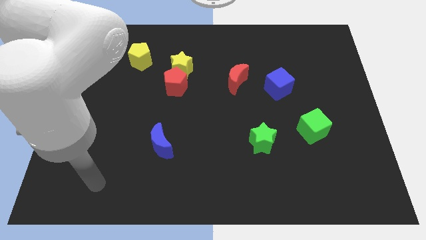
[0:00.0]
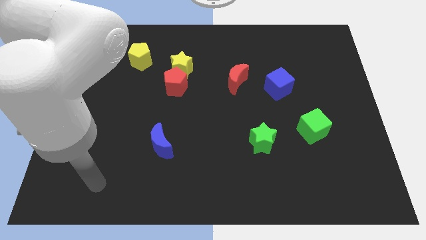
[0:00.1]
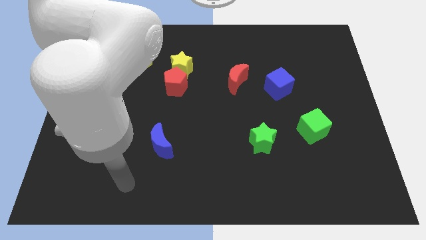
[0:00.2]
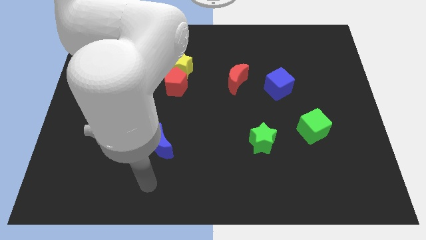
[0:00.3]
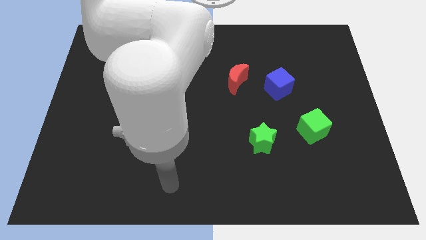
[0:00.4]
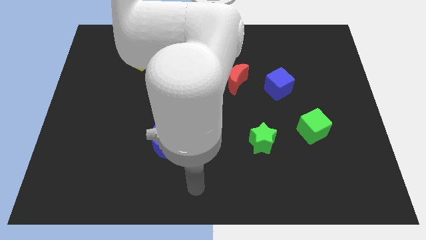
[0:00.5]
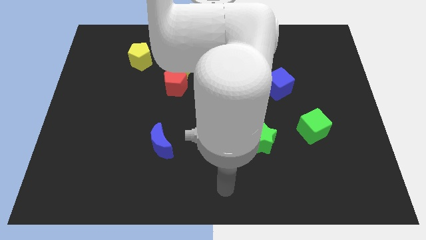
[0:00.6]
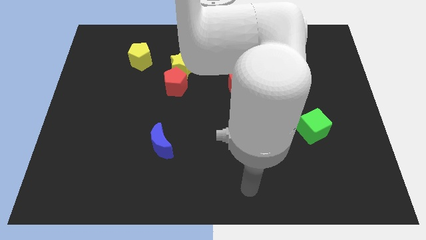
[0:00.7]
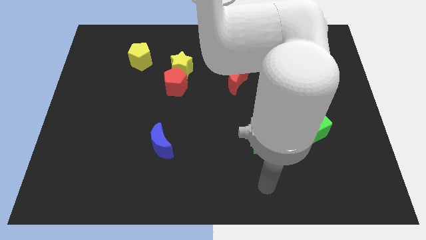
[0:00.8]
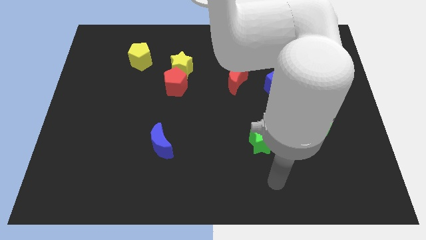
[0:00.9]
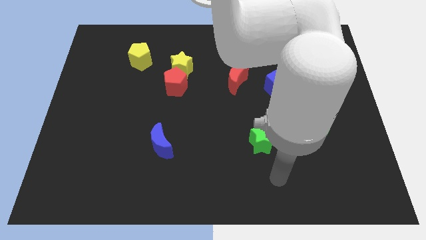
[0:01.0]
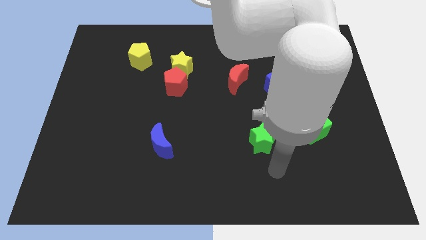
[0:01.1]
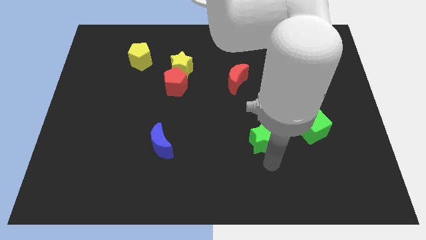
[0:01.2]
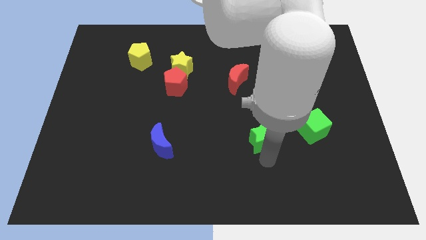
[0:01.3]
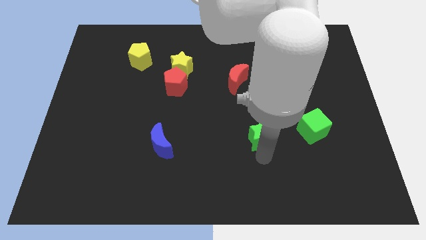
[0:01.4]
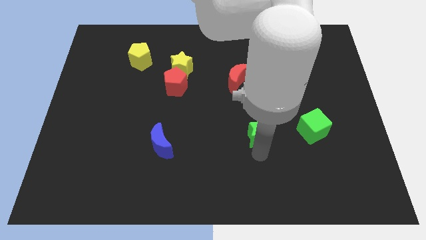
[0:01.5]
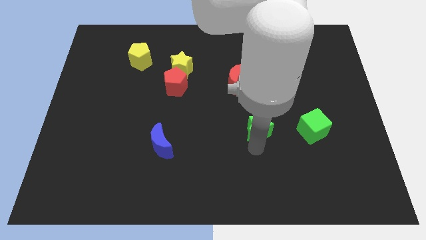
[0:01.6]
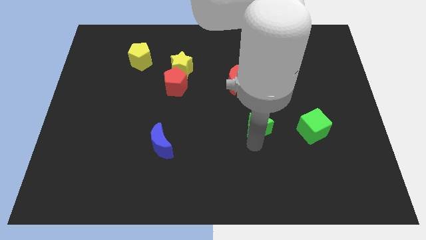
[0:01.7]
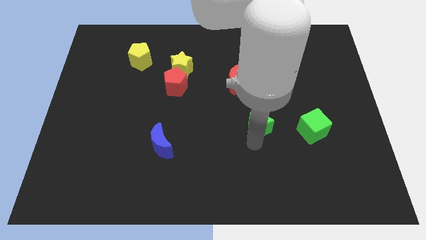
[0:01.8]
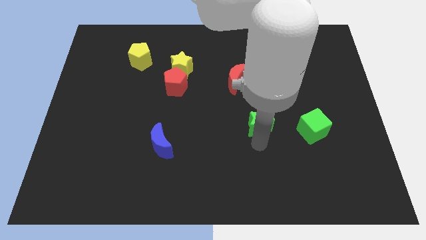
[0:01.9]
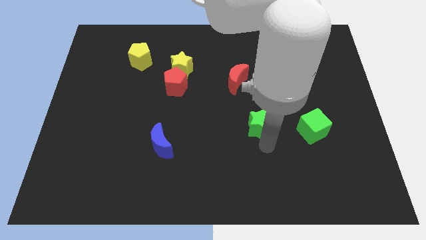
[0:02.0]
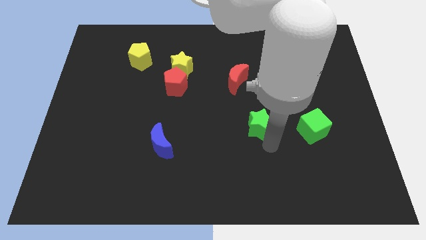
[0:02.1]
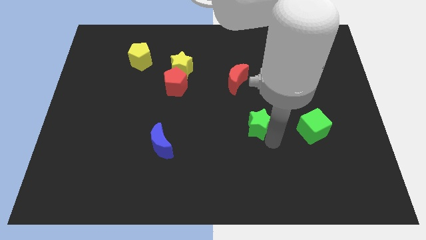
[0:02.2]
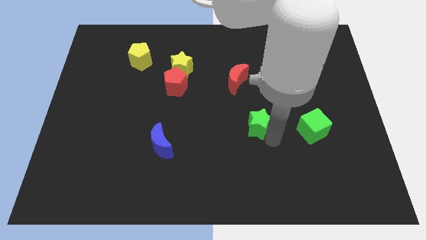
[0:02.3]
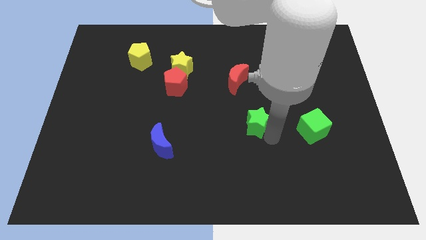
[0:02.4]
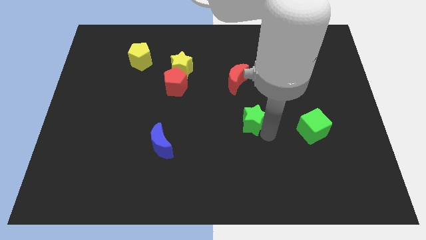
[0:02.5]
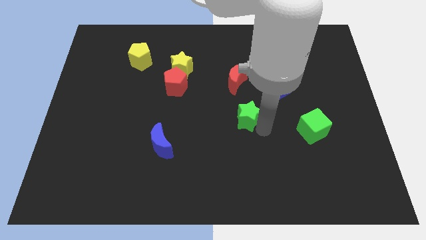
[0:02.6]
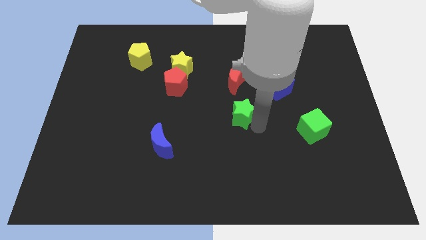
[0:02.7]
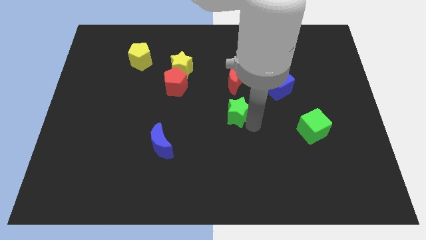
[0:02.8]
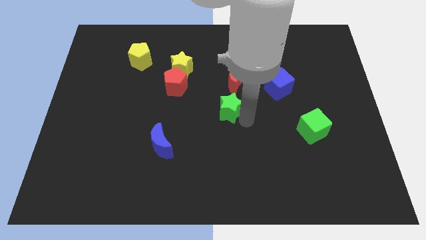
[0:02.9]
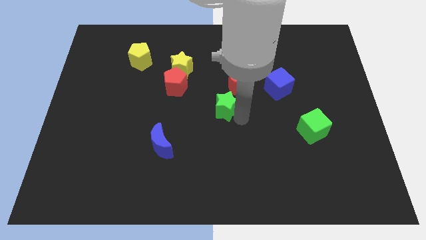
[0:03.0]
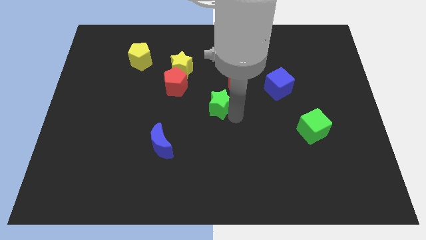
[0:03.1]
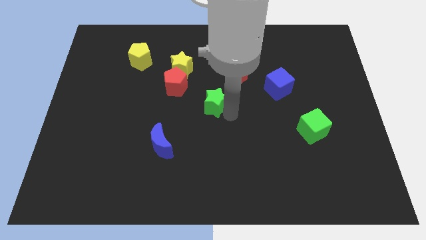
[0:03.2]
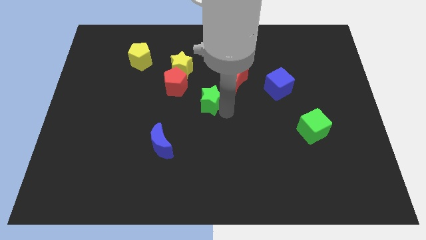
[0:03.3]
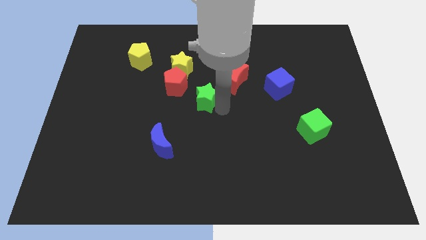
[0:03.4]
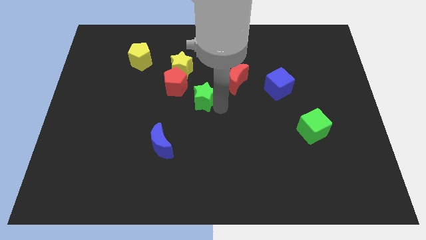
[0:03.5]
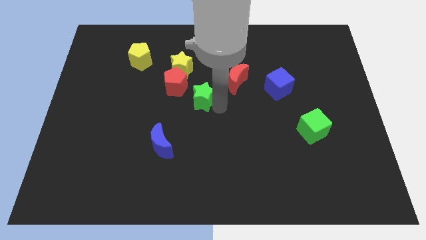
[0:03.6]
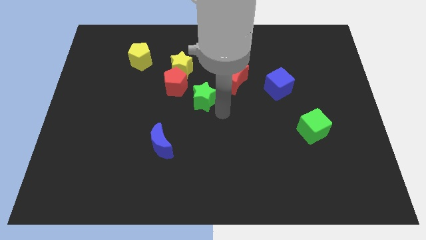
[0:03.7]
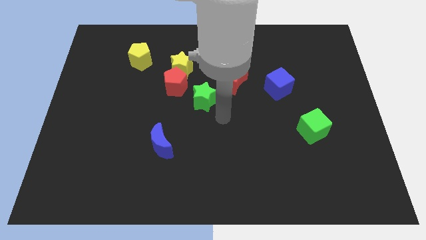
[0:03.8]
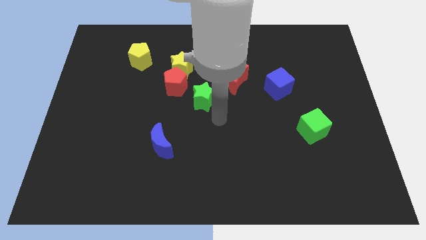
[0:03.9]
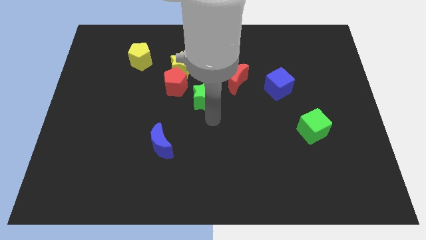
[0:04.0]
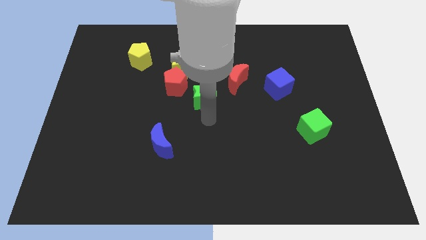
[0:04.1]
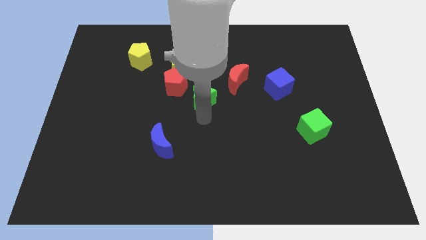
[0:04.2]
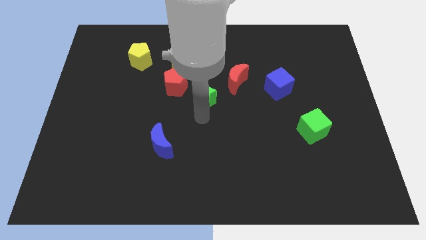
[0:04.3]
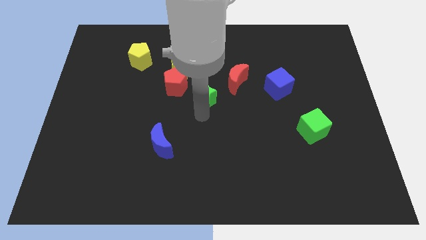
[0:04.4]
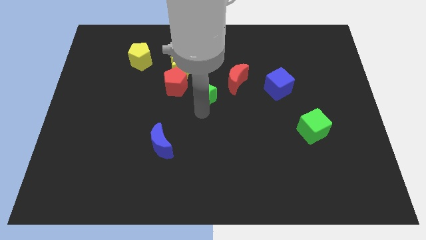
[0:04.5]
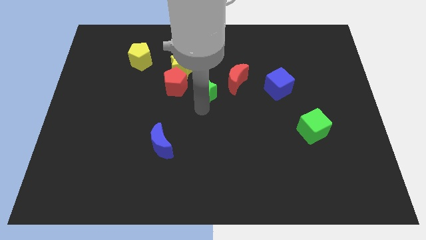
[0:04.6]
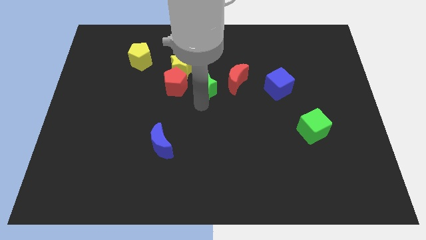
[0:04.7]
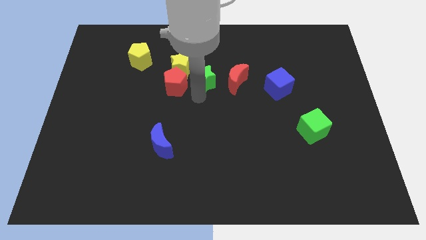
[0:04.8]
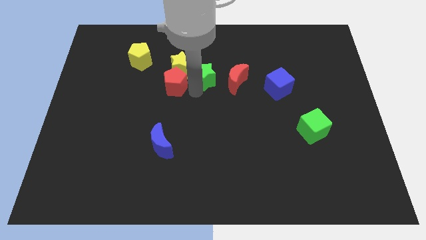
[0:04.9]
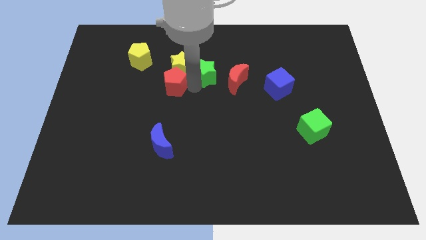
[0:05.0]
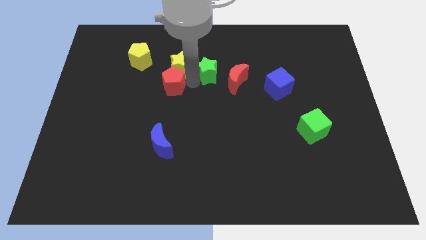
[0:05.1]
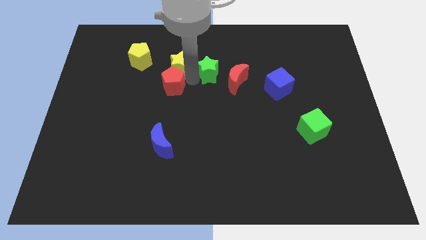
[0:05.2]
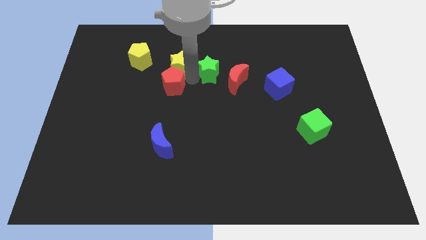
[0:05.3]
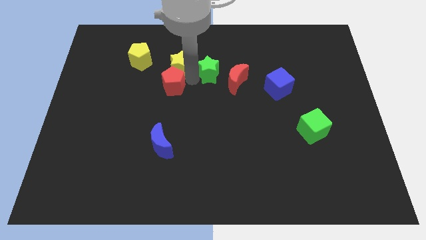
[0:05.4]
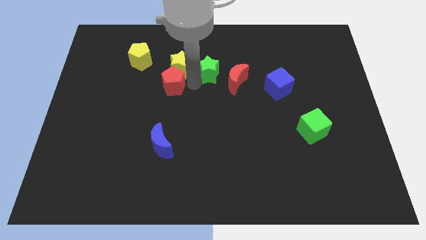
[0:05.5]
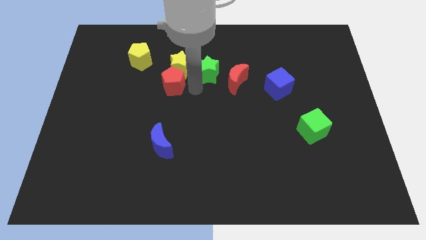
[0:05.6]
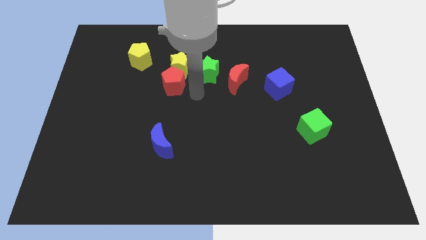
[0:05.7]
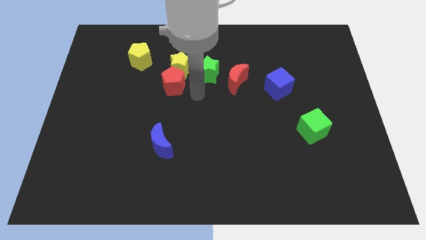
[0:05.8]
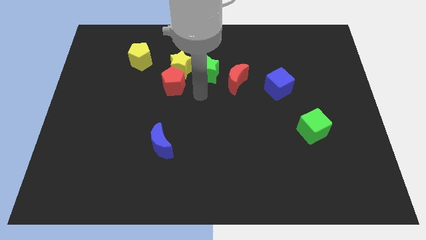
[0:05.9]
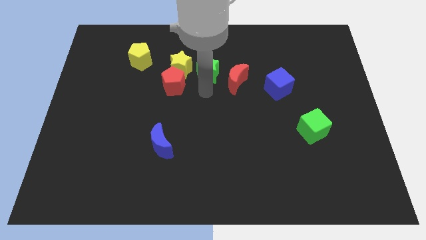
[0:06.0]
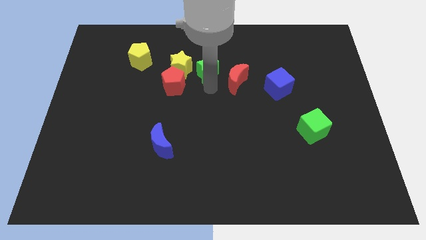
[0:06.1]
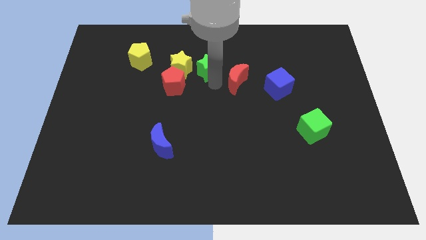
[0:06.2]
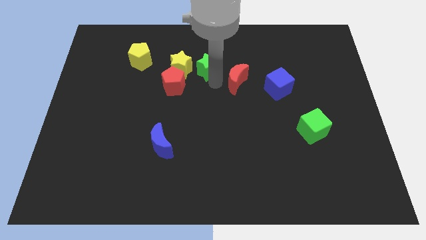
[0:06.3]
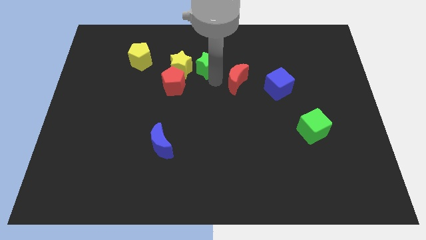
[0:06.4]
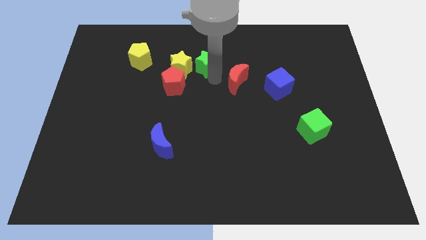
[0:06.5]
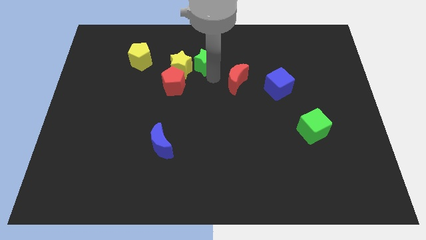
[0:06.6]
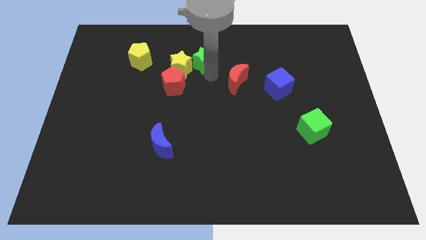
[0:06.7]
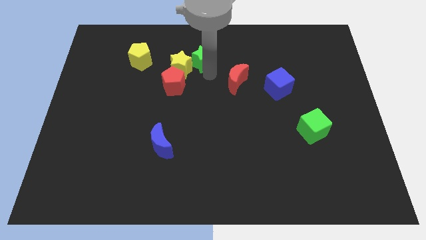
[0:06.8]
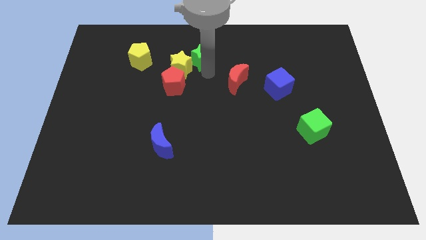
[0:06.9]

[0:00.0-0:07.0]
push the green star to the yellow star

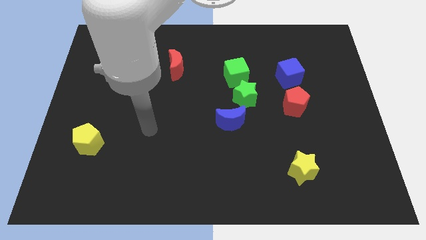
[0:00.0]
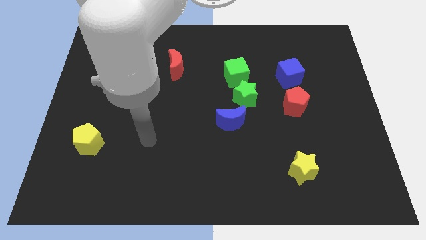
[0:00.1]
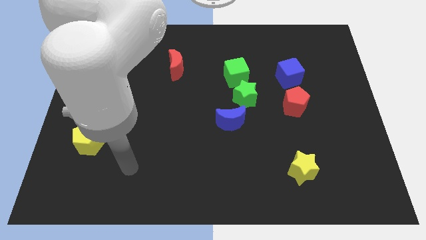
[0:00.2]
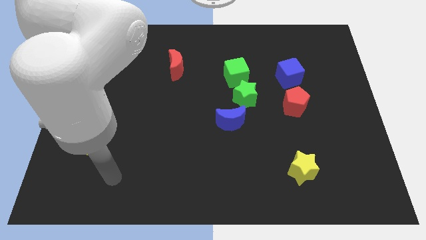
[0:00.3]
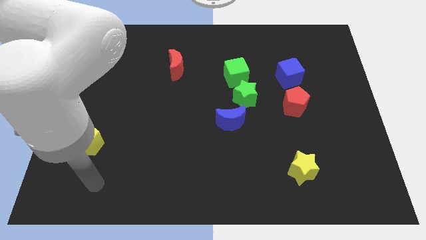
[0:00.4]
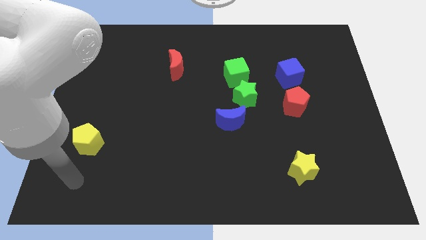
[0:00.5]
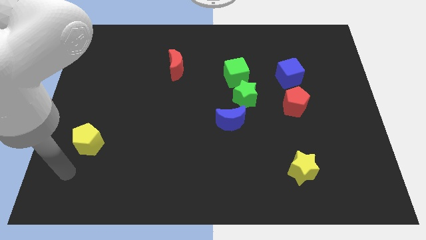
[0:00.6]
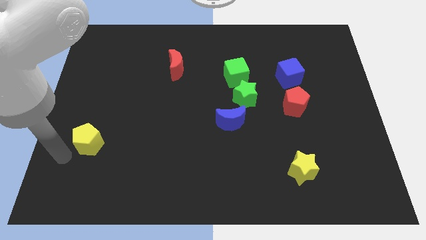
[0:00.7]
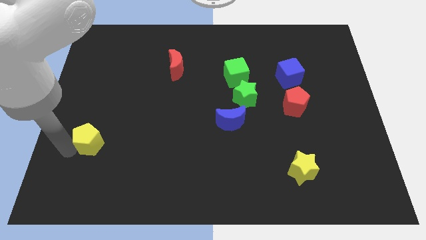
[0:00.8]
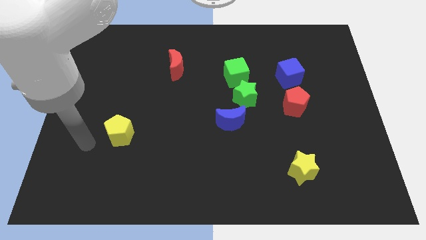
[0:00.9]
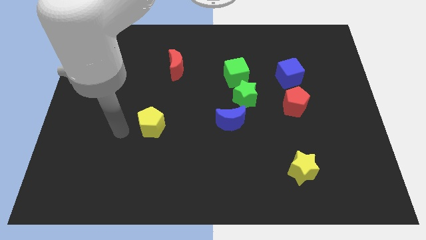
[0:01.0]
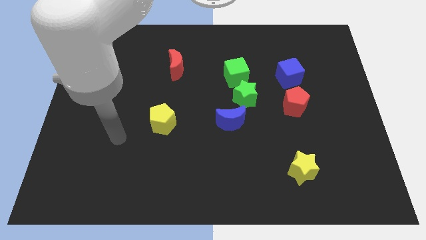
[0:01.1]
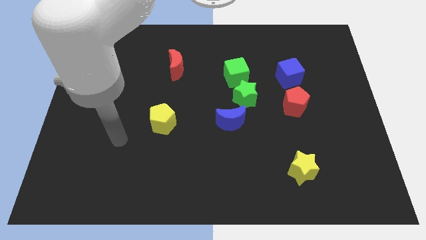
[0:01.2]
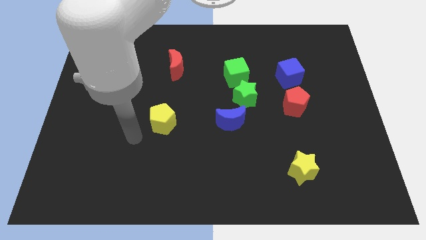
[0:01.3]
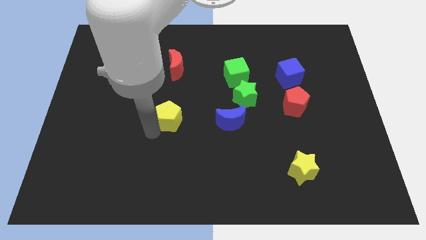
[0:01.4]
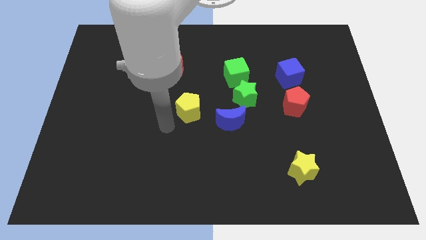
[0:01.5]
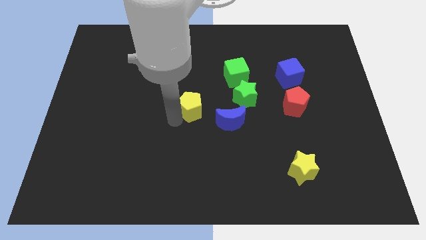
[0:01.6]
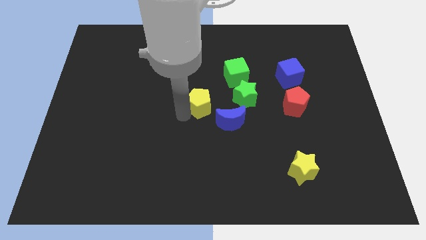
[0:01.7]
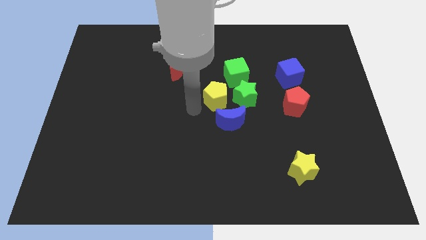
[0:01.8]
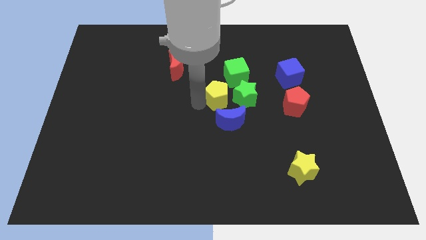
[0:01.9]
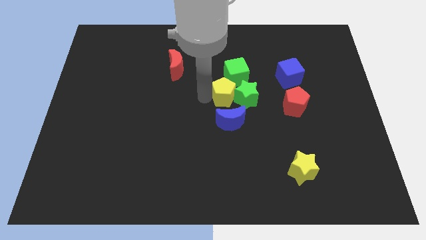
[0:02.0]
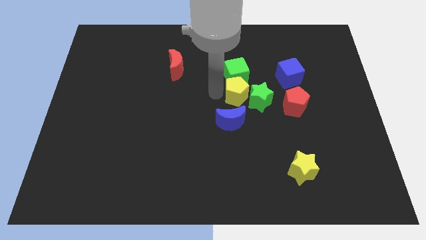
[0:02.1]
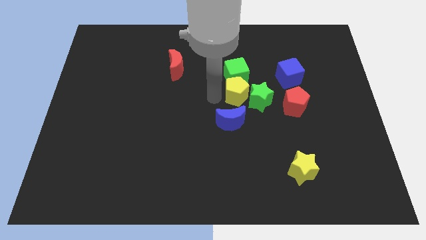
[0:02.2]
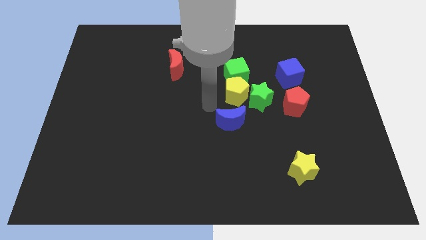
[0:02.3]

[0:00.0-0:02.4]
put the yellow pentagon to the green cube
